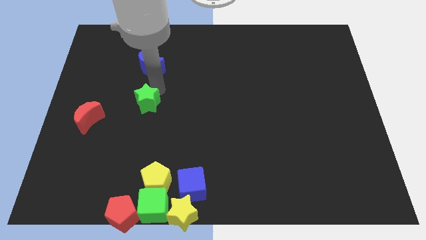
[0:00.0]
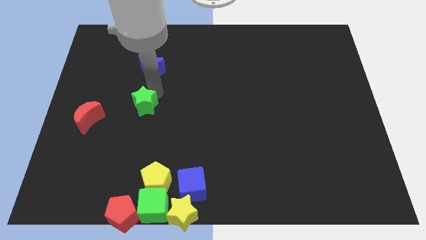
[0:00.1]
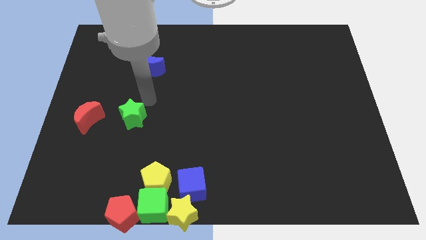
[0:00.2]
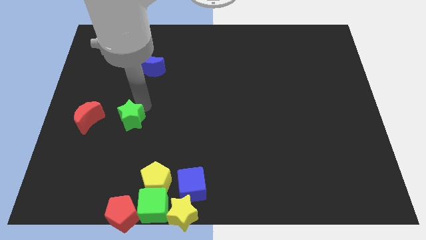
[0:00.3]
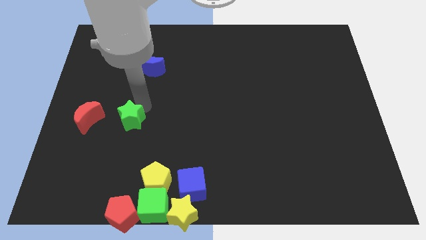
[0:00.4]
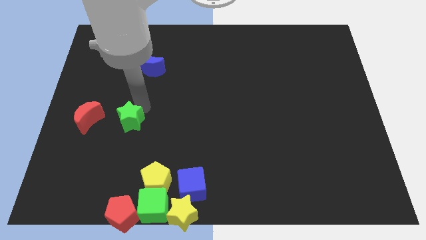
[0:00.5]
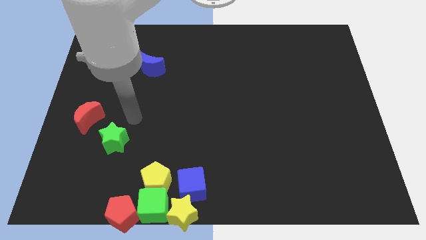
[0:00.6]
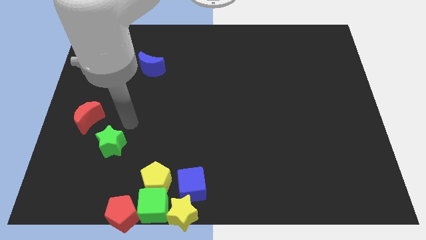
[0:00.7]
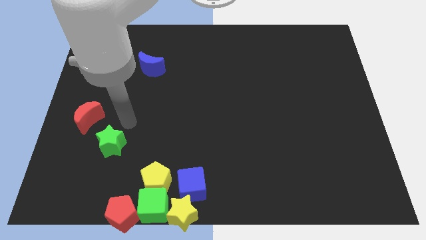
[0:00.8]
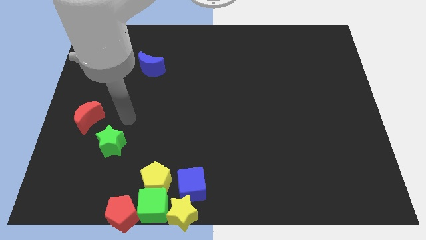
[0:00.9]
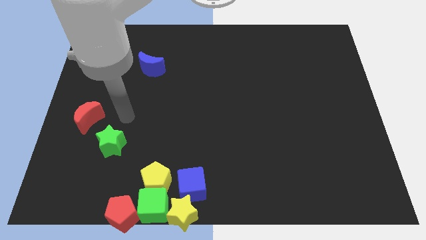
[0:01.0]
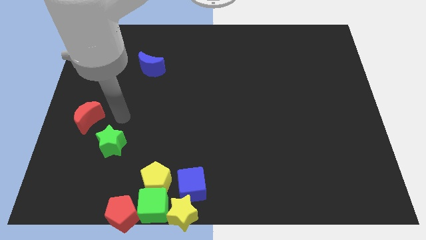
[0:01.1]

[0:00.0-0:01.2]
push the green star below the red crescent

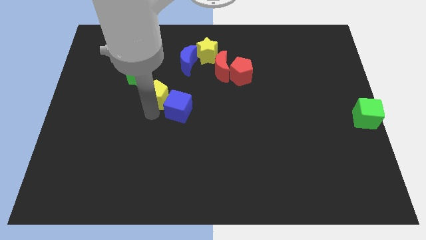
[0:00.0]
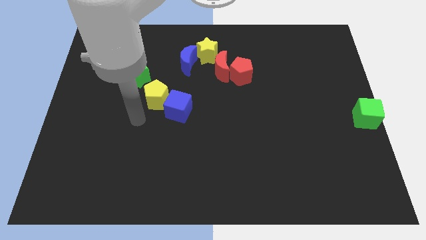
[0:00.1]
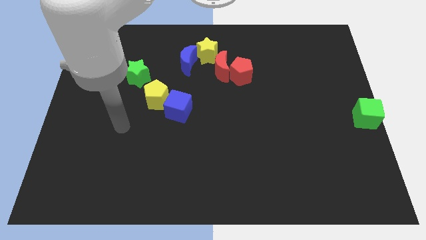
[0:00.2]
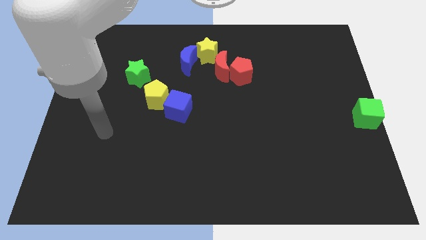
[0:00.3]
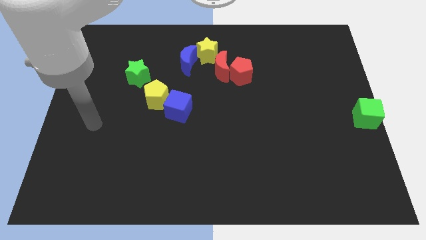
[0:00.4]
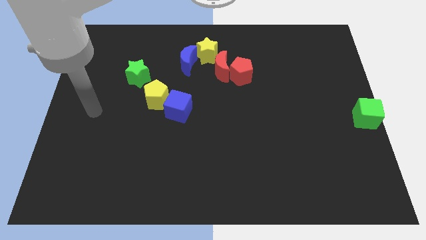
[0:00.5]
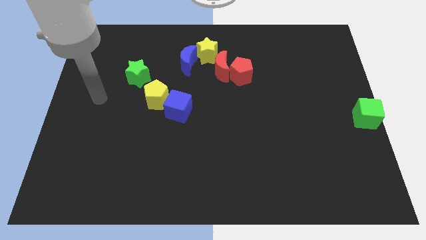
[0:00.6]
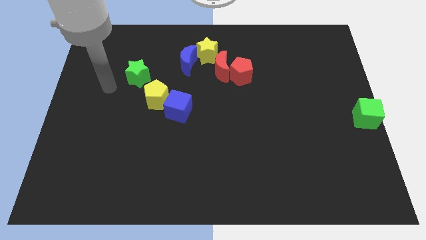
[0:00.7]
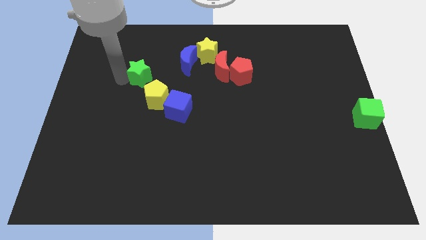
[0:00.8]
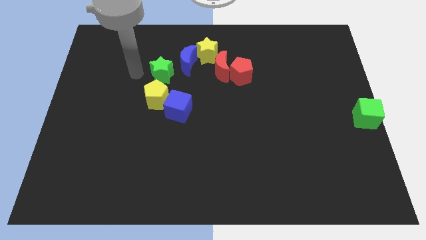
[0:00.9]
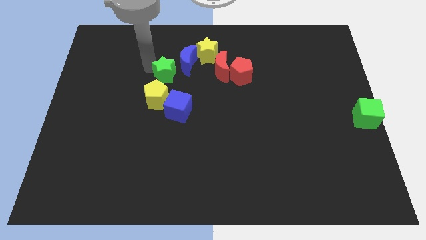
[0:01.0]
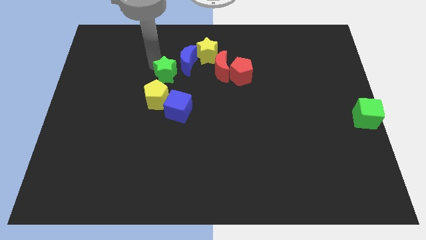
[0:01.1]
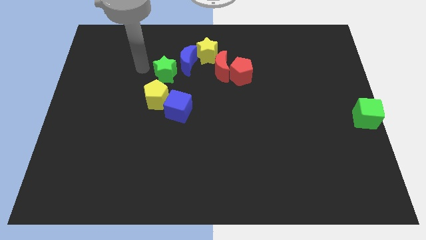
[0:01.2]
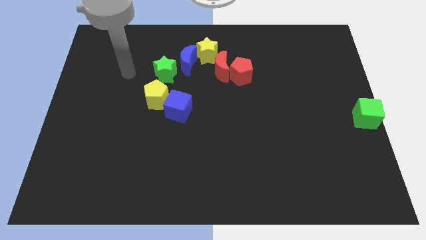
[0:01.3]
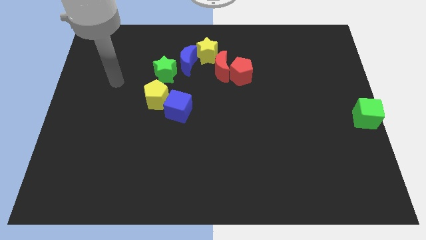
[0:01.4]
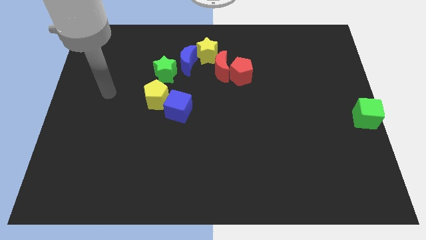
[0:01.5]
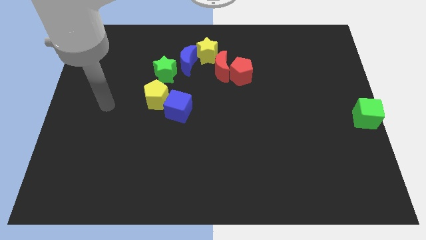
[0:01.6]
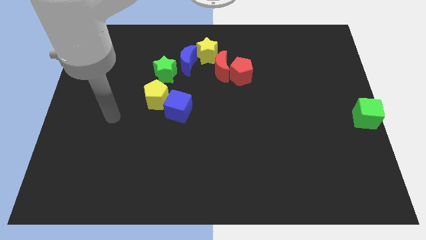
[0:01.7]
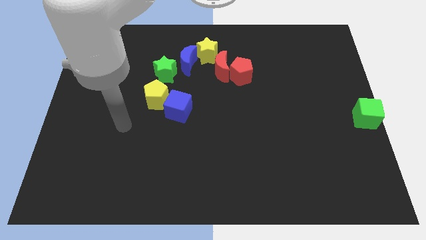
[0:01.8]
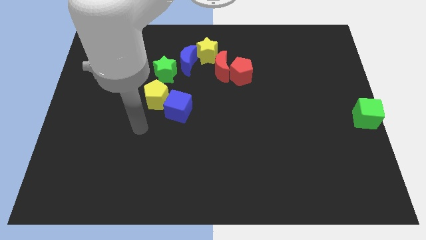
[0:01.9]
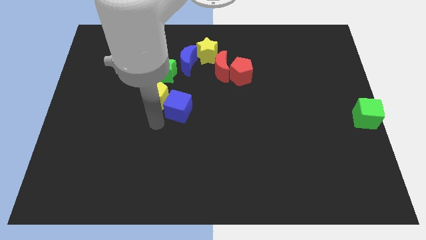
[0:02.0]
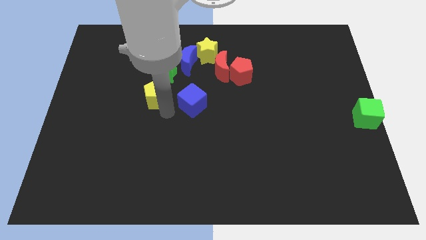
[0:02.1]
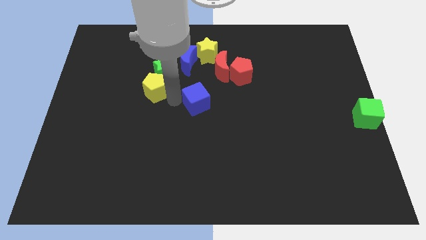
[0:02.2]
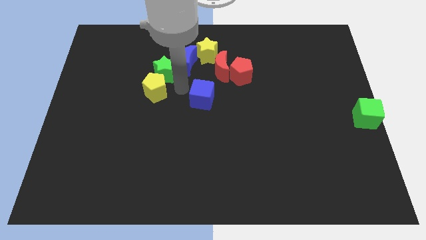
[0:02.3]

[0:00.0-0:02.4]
move the green star close to the blue crescent

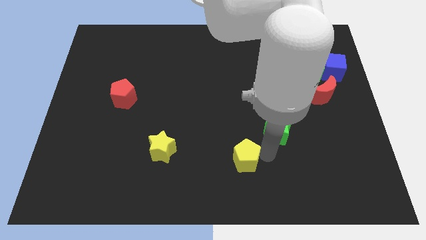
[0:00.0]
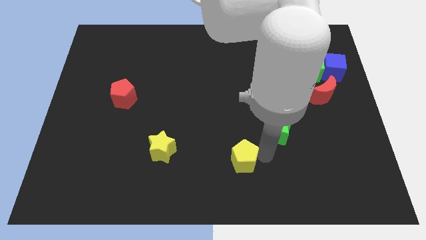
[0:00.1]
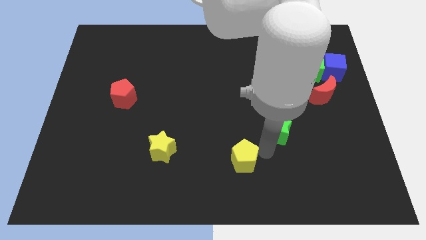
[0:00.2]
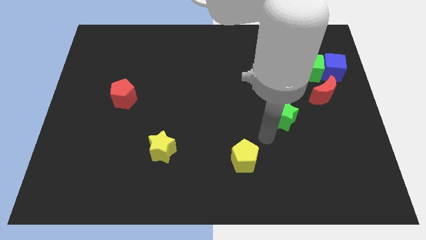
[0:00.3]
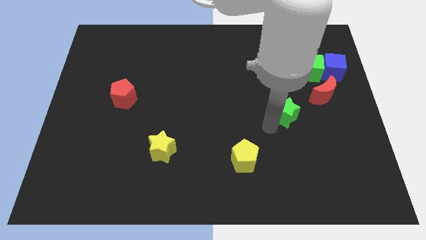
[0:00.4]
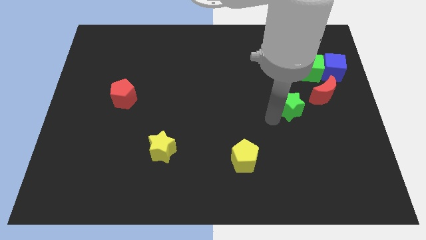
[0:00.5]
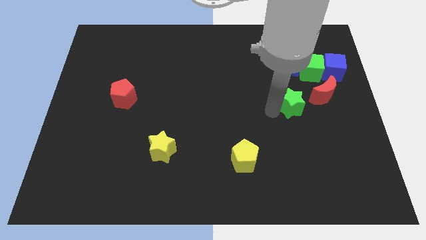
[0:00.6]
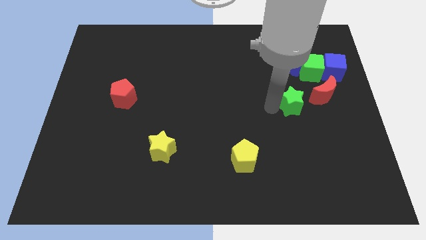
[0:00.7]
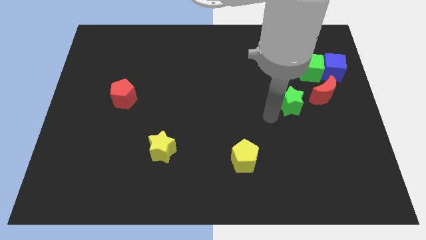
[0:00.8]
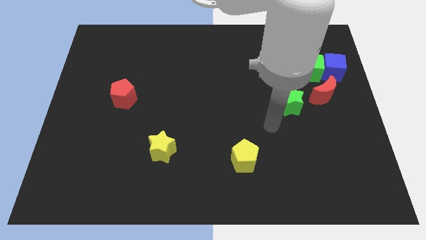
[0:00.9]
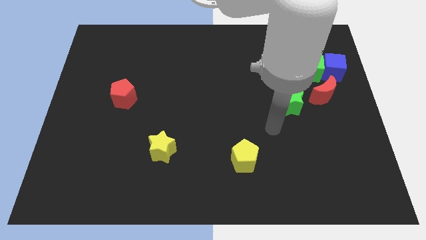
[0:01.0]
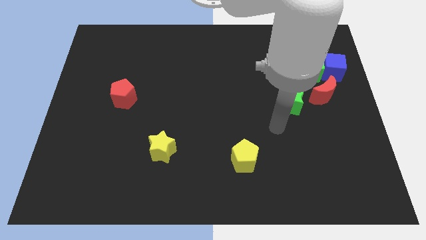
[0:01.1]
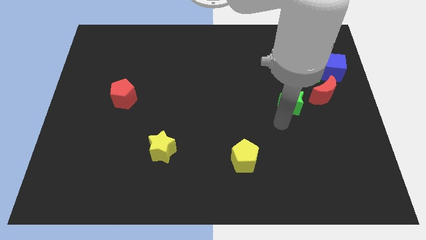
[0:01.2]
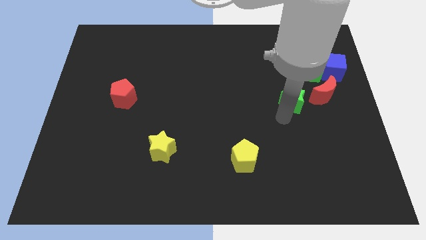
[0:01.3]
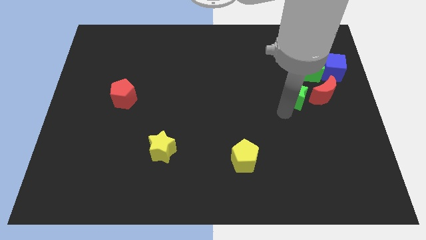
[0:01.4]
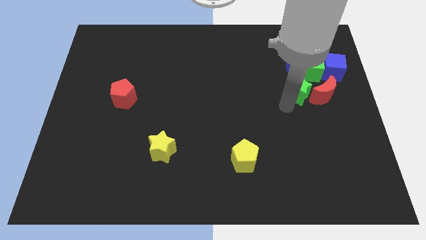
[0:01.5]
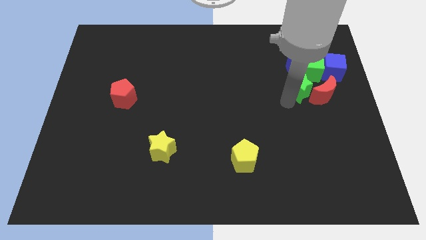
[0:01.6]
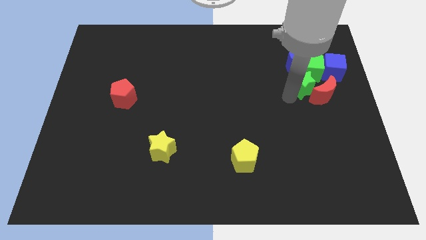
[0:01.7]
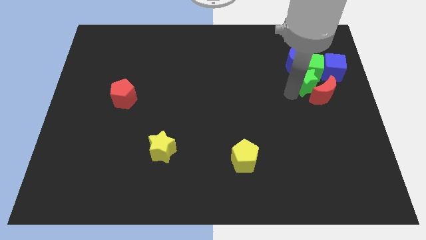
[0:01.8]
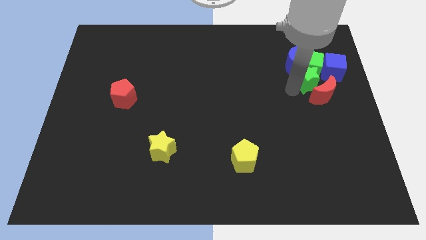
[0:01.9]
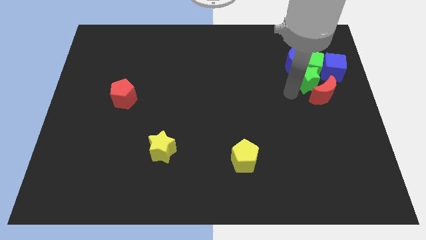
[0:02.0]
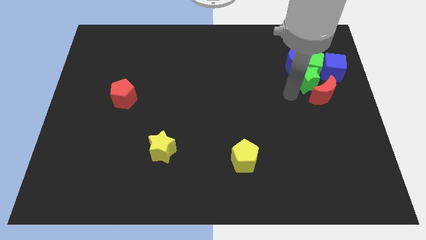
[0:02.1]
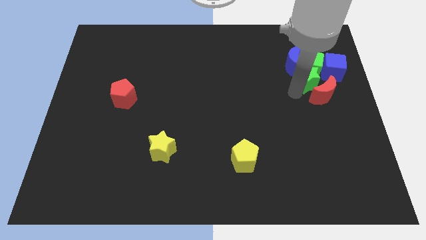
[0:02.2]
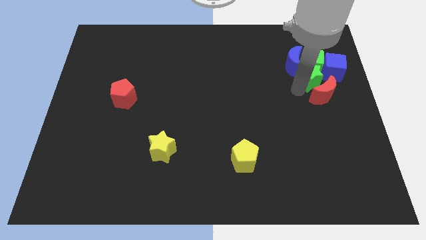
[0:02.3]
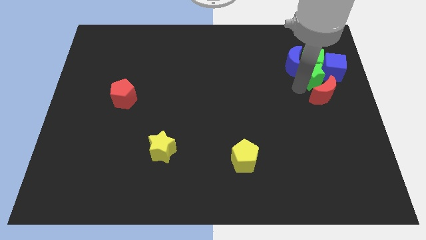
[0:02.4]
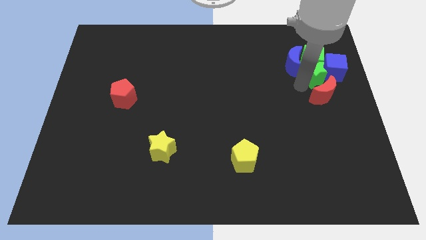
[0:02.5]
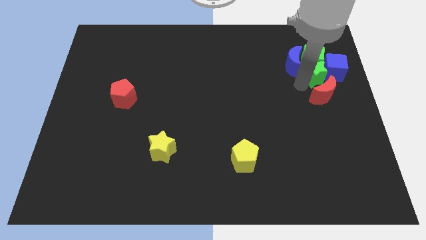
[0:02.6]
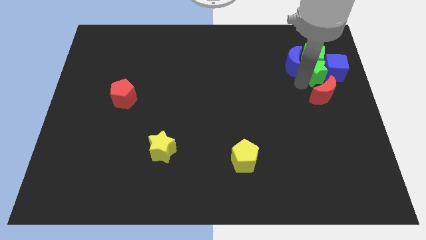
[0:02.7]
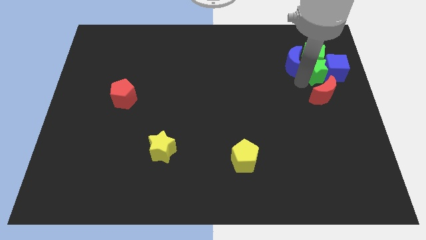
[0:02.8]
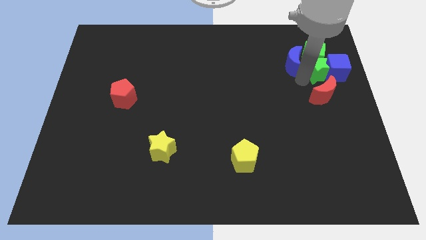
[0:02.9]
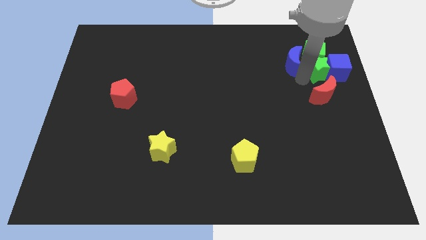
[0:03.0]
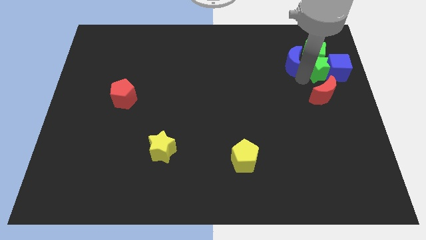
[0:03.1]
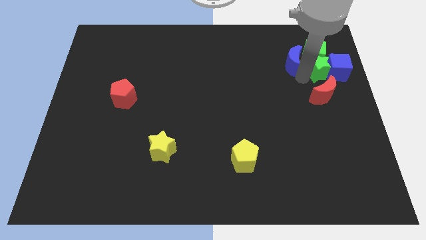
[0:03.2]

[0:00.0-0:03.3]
push the green star towards the group of blocks

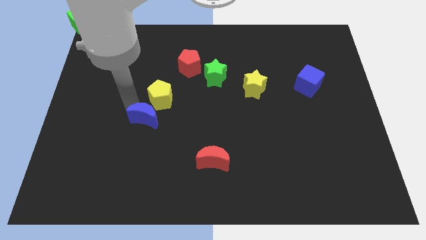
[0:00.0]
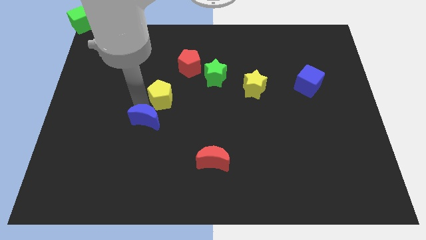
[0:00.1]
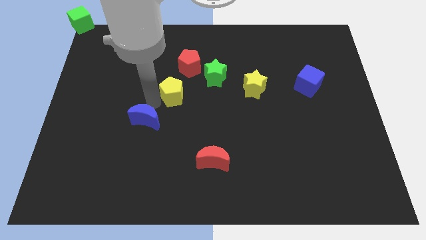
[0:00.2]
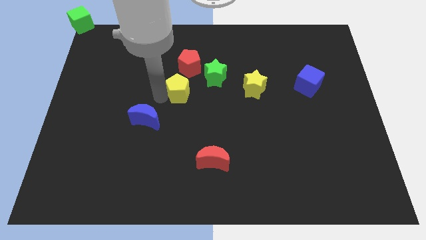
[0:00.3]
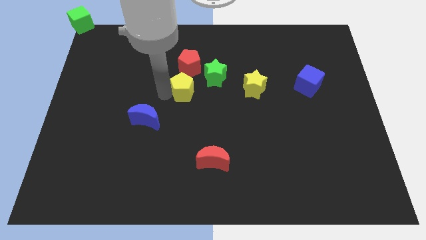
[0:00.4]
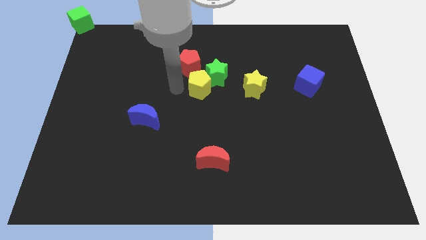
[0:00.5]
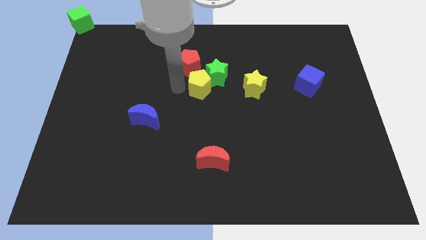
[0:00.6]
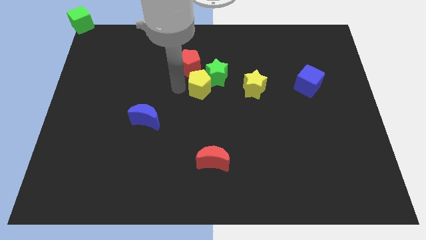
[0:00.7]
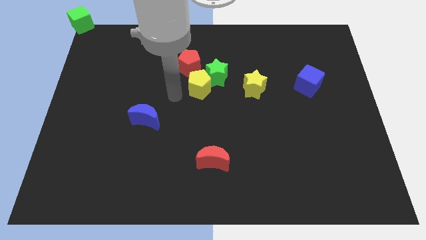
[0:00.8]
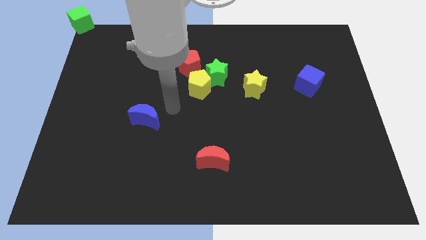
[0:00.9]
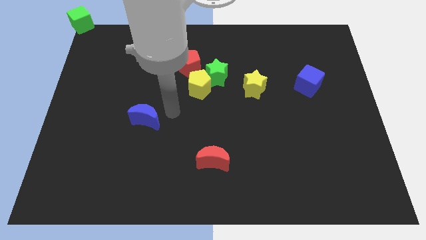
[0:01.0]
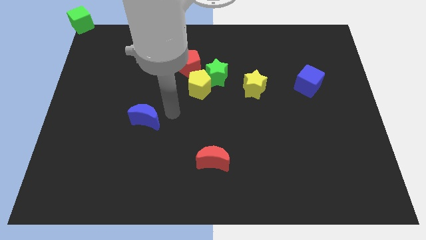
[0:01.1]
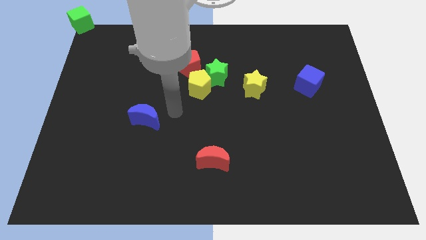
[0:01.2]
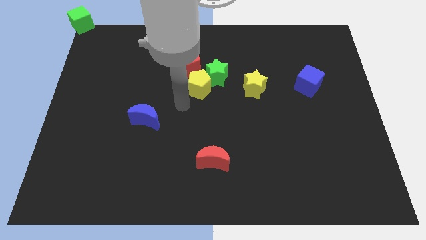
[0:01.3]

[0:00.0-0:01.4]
push the yellow pentagon towards the center of the board

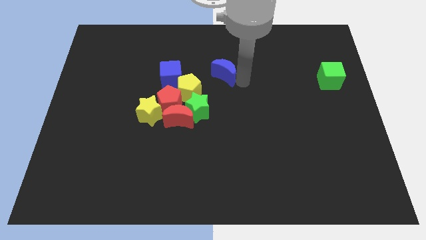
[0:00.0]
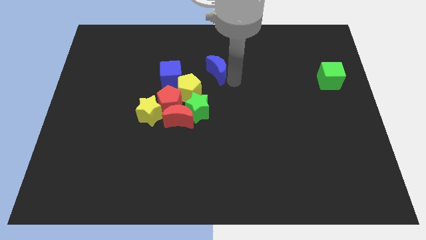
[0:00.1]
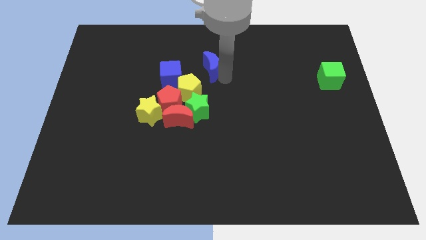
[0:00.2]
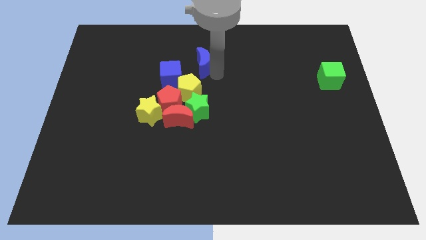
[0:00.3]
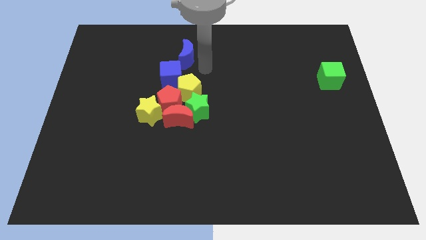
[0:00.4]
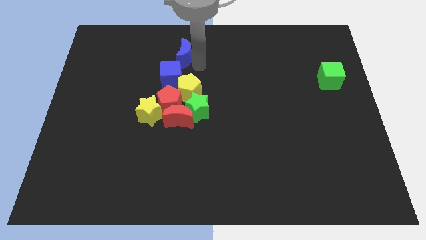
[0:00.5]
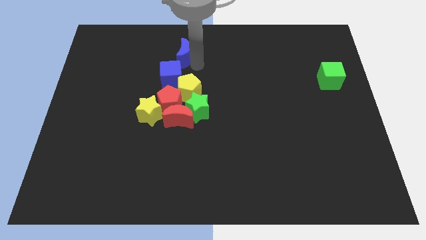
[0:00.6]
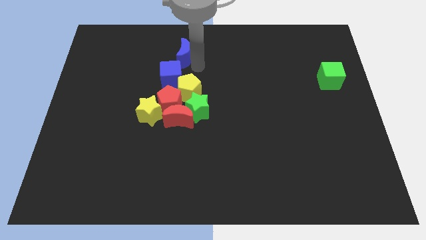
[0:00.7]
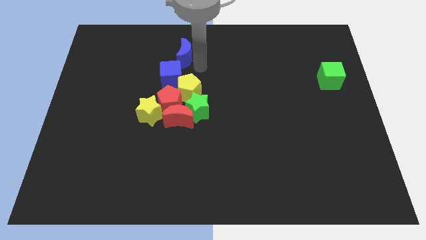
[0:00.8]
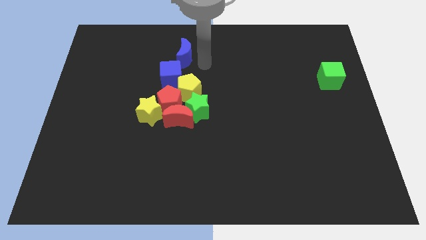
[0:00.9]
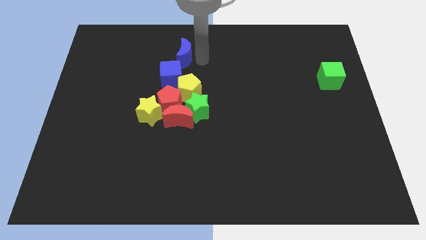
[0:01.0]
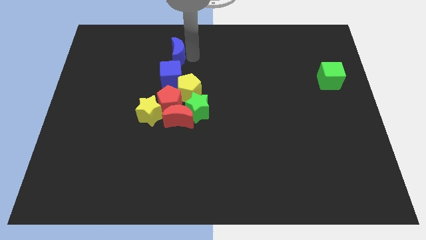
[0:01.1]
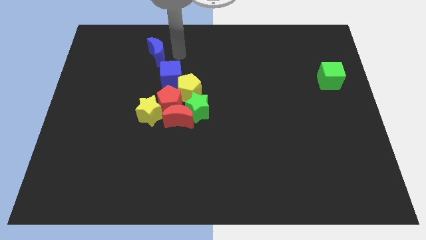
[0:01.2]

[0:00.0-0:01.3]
place the blue moon above the blue cube
